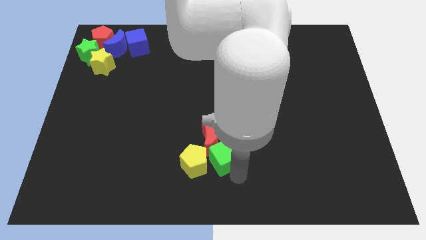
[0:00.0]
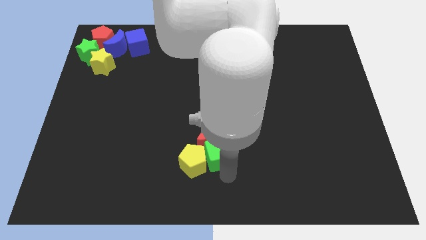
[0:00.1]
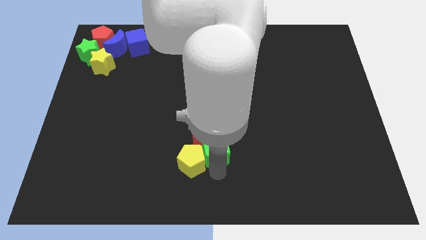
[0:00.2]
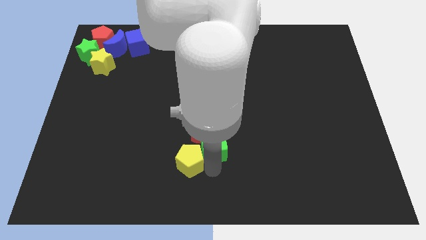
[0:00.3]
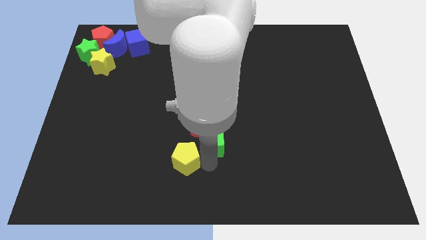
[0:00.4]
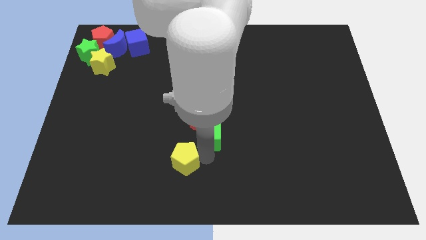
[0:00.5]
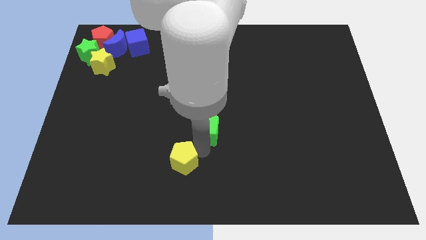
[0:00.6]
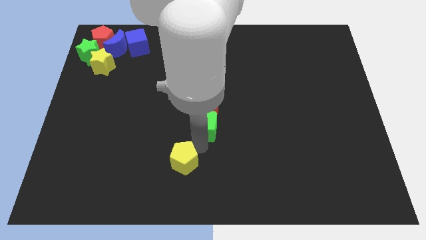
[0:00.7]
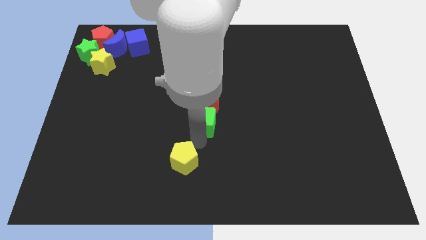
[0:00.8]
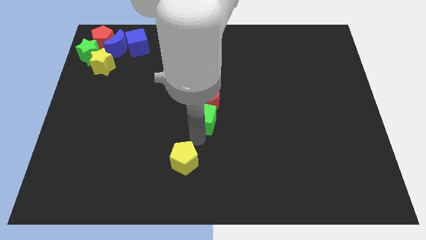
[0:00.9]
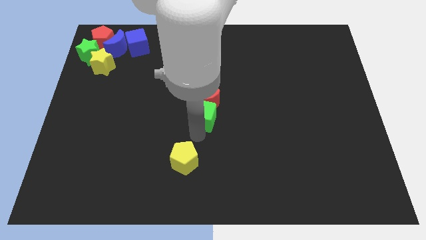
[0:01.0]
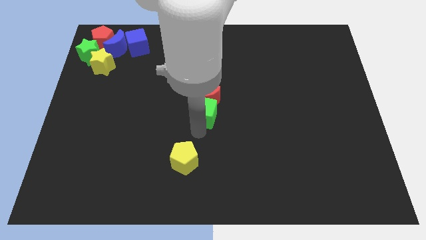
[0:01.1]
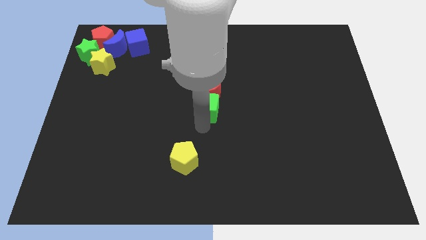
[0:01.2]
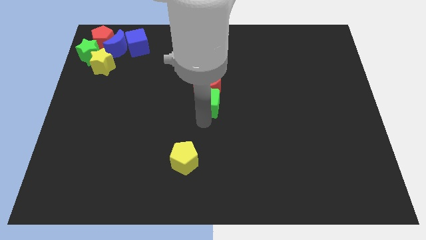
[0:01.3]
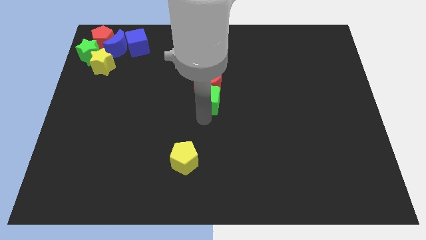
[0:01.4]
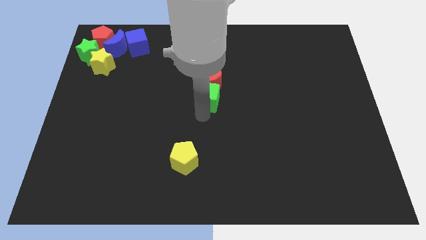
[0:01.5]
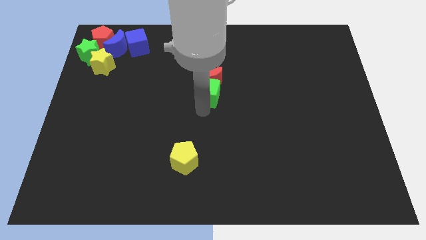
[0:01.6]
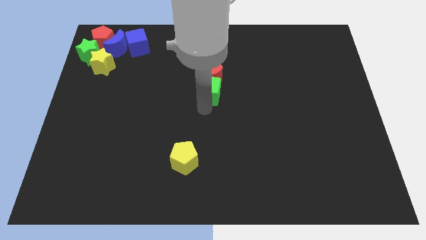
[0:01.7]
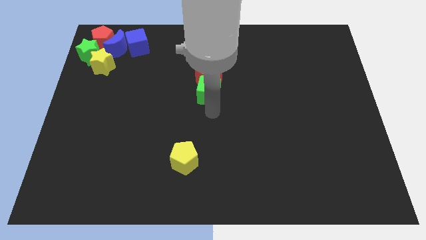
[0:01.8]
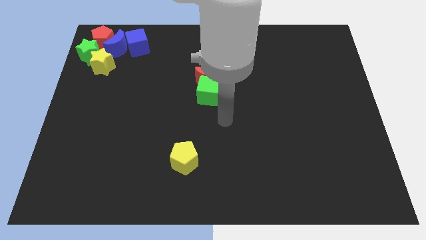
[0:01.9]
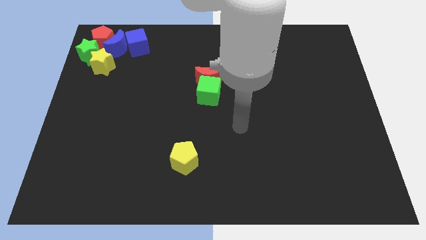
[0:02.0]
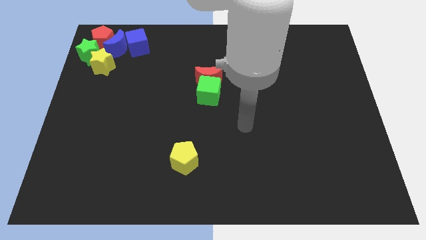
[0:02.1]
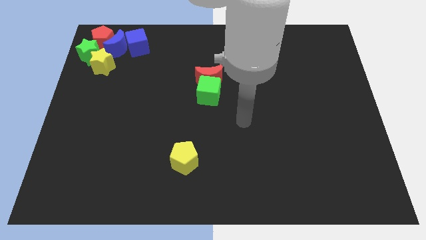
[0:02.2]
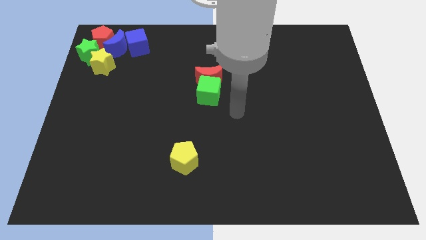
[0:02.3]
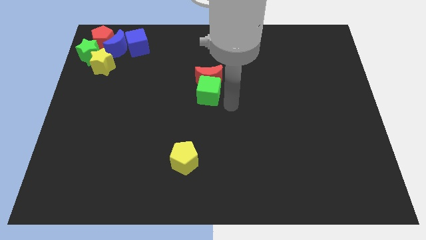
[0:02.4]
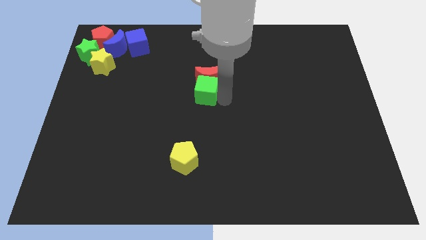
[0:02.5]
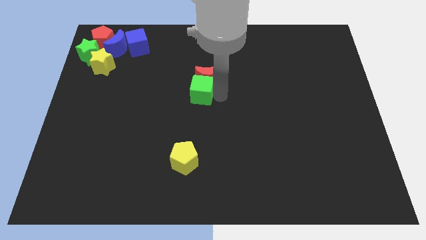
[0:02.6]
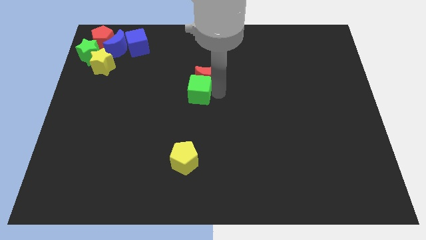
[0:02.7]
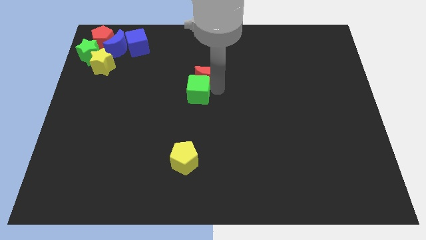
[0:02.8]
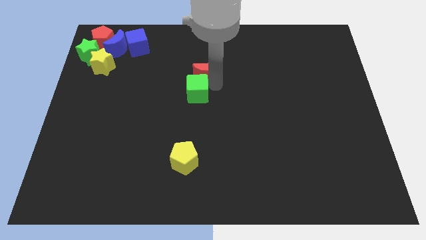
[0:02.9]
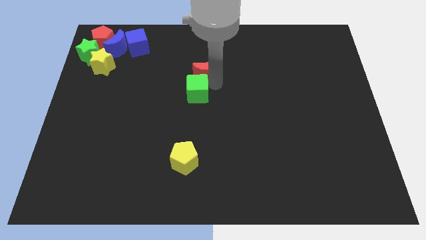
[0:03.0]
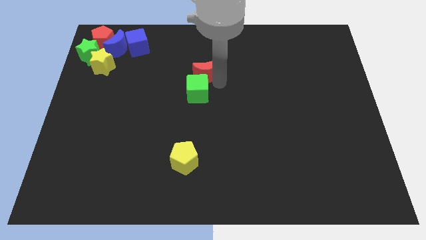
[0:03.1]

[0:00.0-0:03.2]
move the green cube and the red crescent towards the center of the board

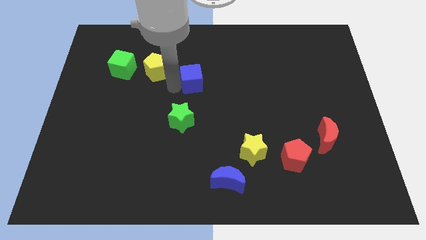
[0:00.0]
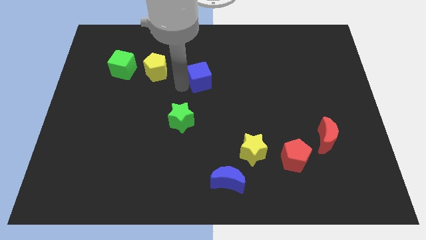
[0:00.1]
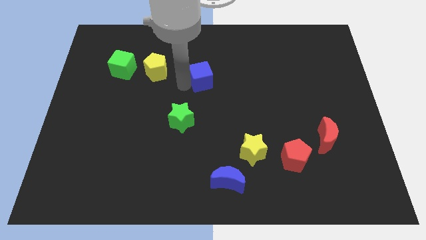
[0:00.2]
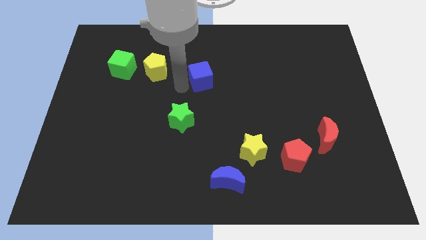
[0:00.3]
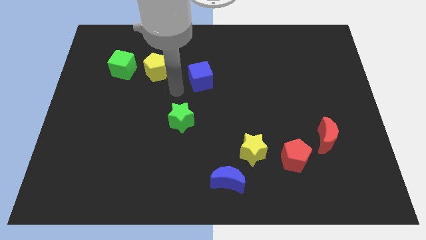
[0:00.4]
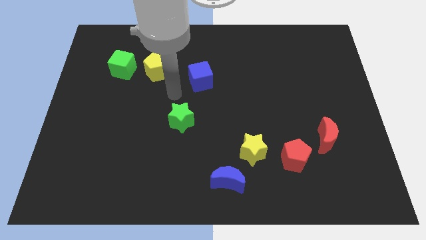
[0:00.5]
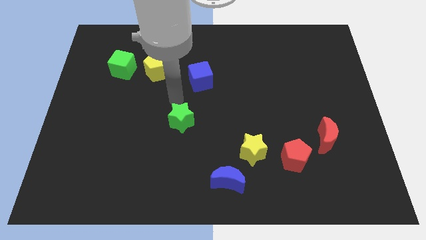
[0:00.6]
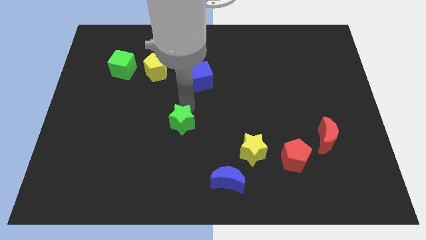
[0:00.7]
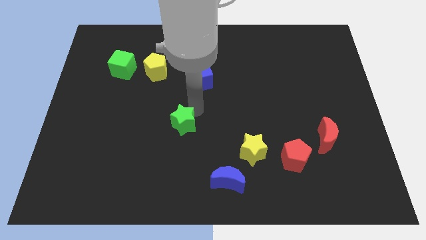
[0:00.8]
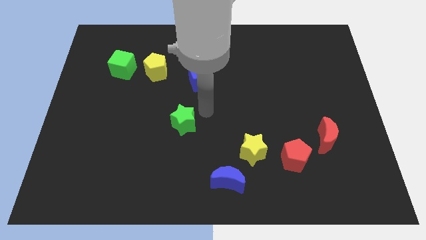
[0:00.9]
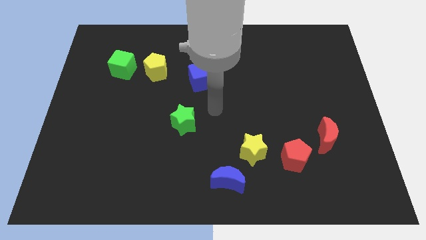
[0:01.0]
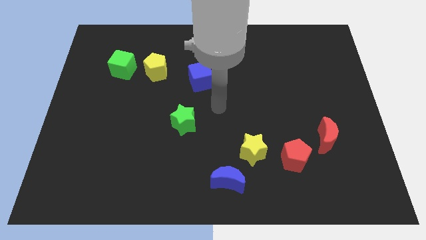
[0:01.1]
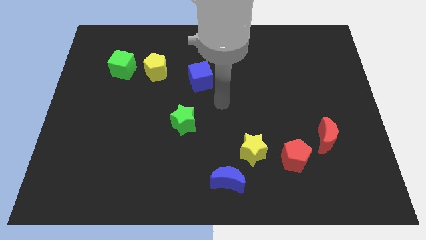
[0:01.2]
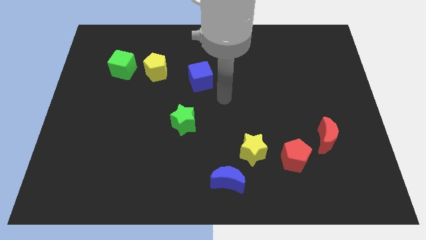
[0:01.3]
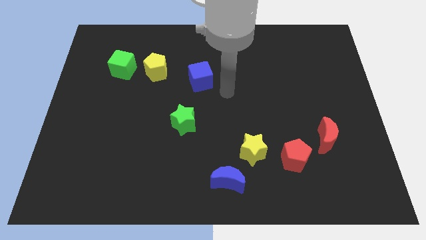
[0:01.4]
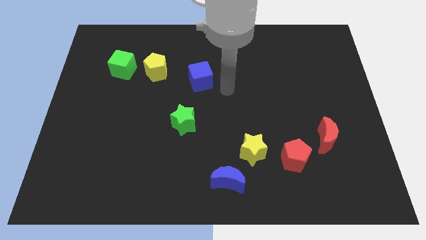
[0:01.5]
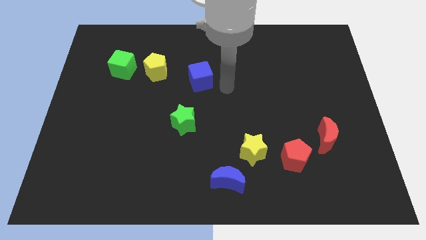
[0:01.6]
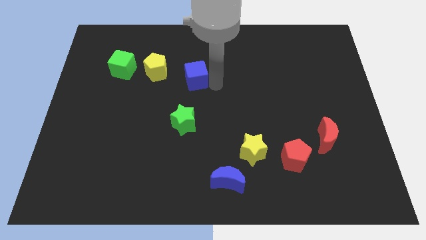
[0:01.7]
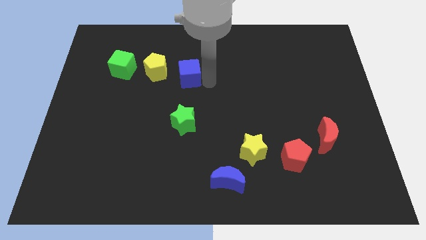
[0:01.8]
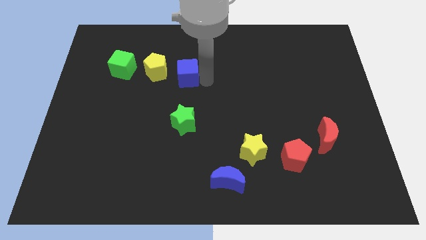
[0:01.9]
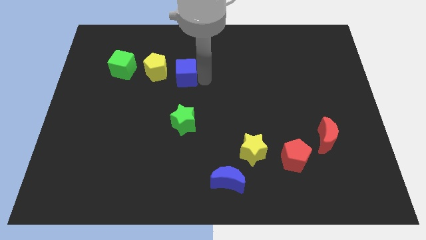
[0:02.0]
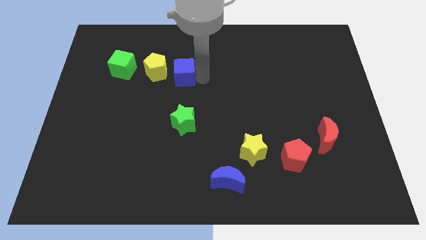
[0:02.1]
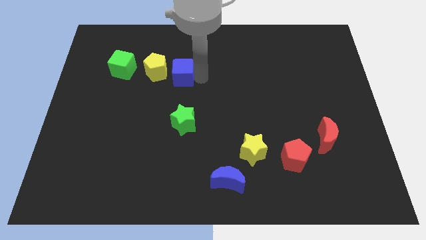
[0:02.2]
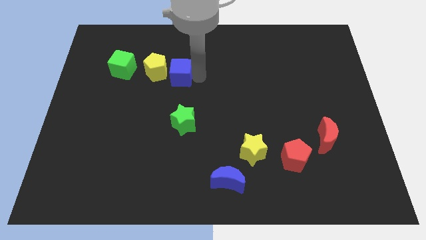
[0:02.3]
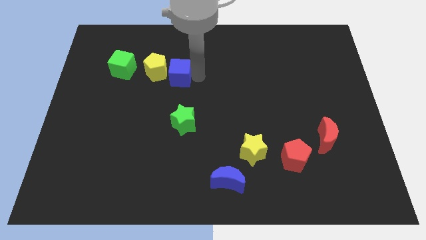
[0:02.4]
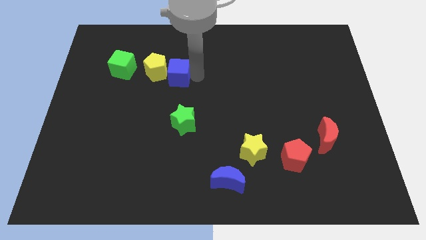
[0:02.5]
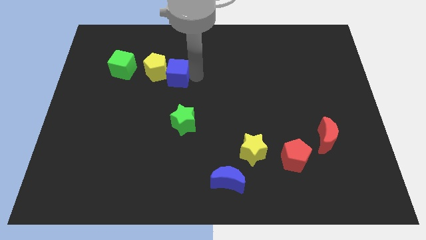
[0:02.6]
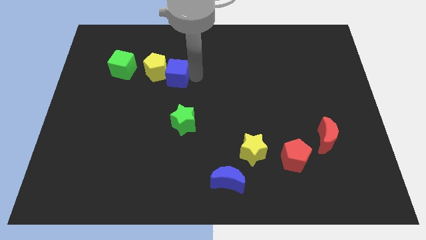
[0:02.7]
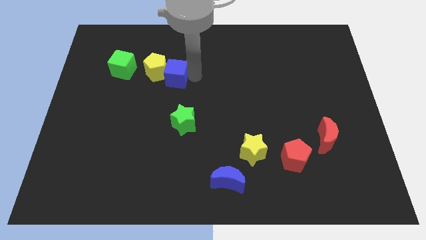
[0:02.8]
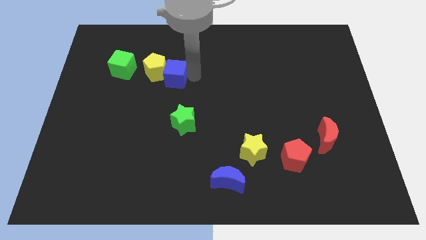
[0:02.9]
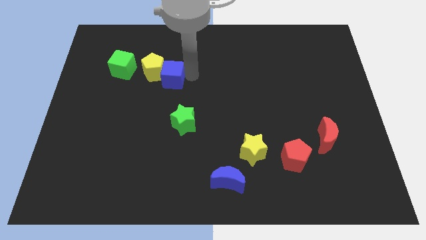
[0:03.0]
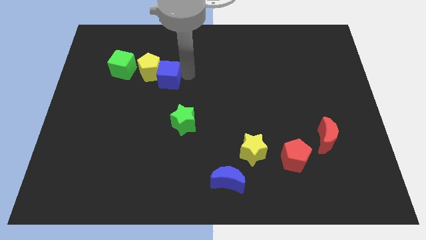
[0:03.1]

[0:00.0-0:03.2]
slide the blue cube diagonally top left to the green star

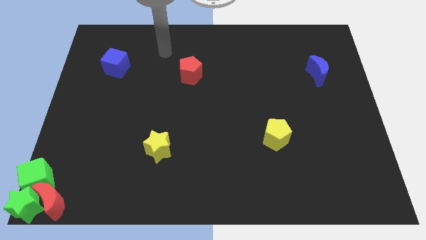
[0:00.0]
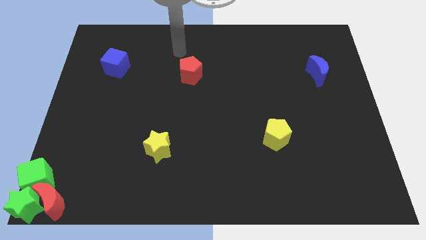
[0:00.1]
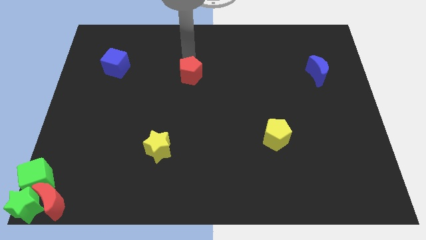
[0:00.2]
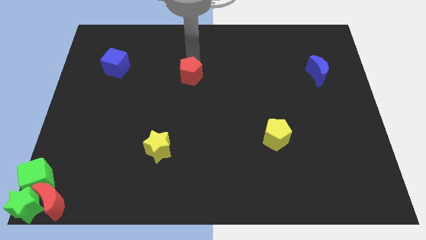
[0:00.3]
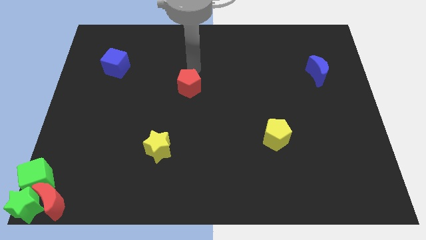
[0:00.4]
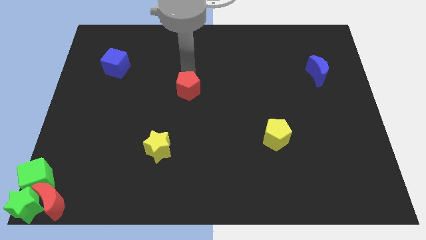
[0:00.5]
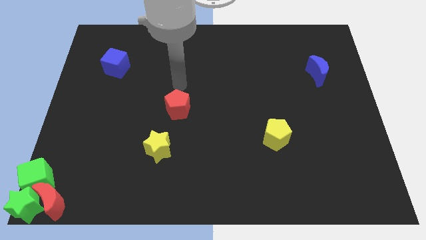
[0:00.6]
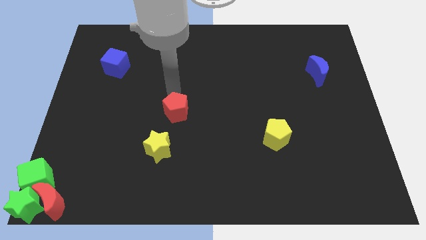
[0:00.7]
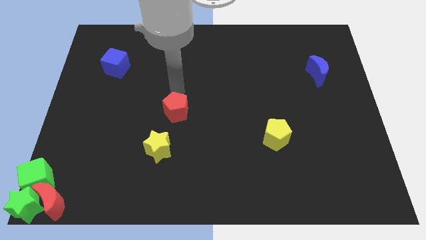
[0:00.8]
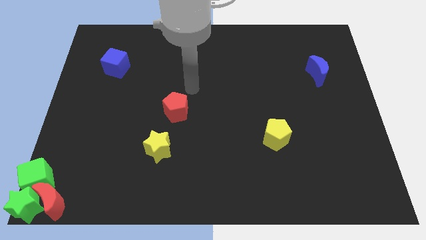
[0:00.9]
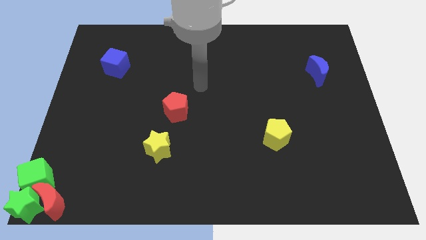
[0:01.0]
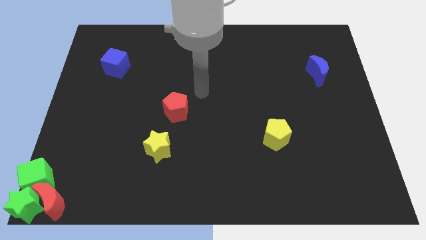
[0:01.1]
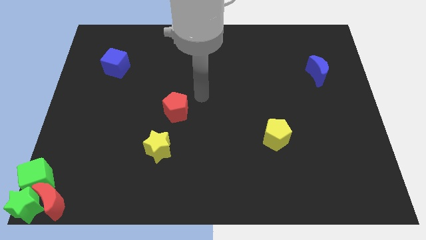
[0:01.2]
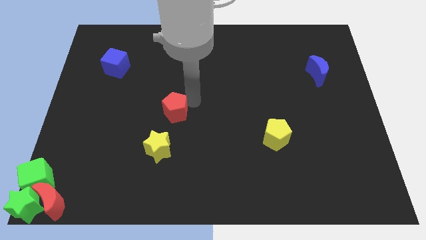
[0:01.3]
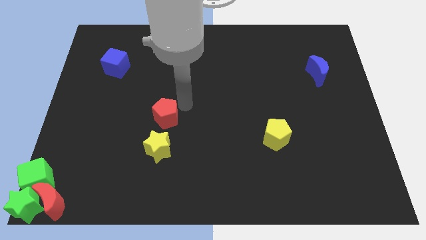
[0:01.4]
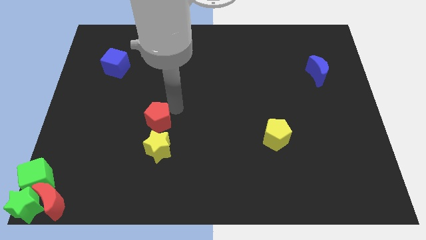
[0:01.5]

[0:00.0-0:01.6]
move the red pentagon to the top of the yellow star

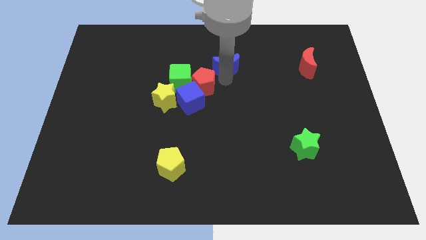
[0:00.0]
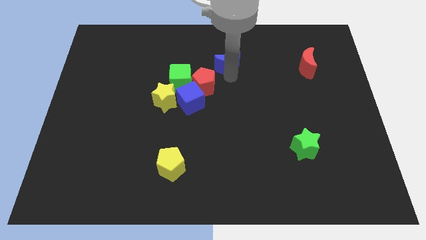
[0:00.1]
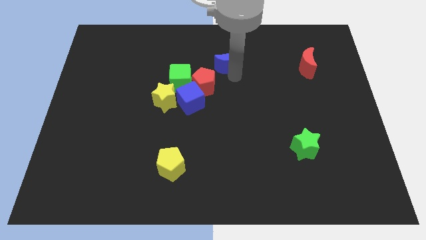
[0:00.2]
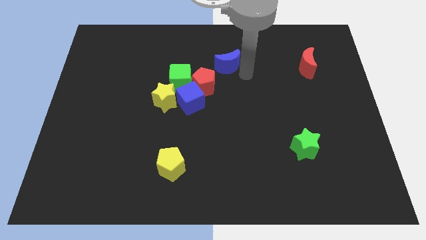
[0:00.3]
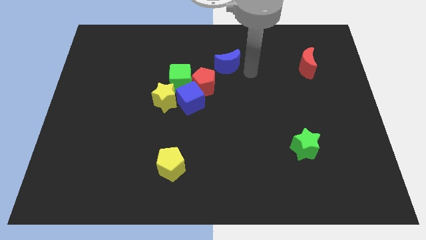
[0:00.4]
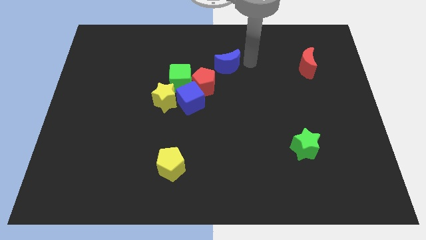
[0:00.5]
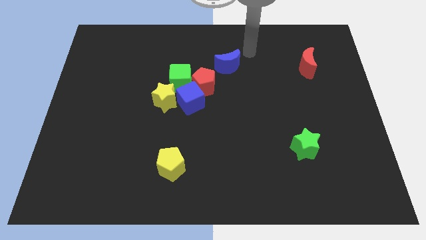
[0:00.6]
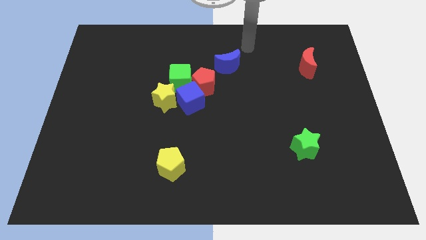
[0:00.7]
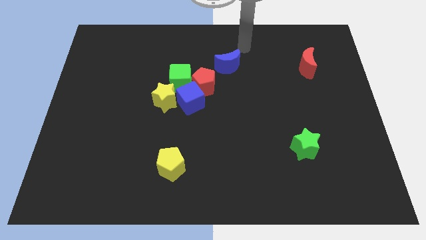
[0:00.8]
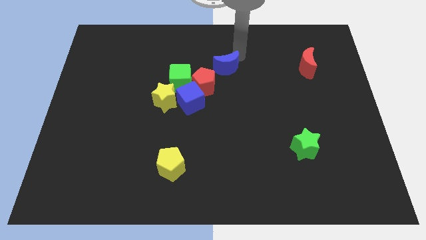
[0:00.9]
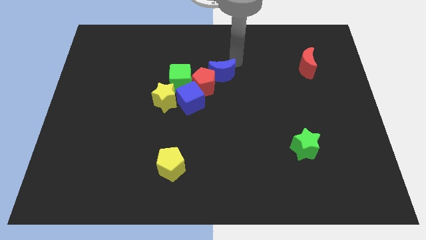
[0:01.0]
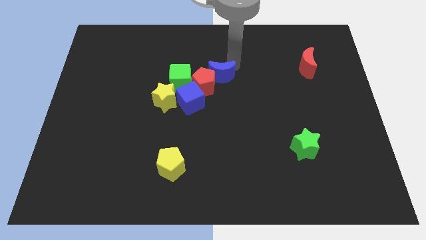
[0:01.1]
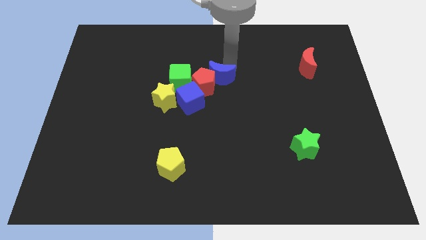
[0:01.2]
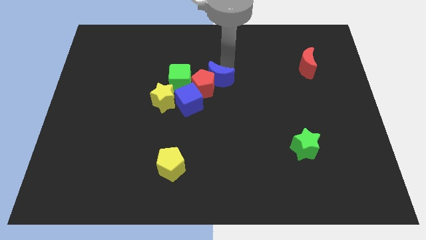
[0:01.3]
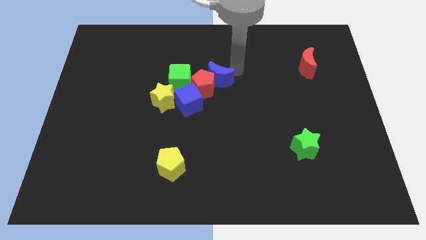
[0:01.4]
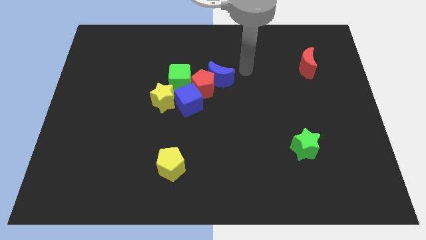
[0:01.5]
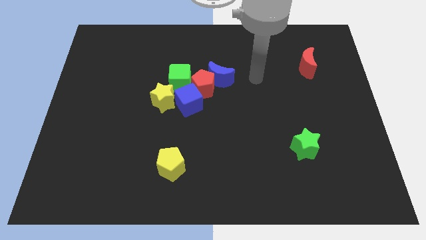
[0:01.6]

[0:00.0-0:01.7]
place the blue crescent diagonal to the red pentagon at the top right side
